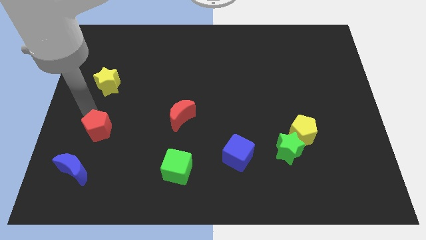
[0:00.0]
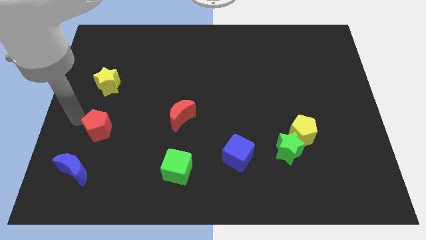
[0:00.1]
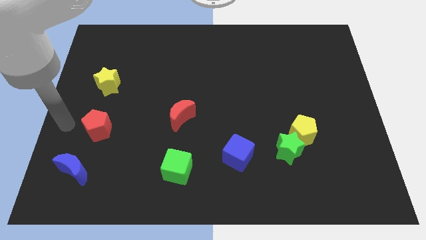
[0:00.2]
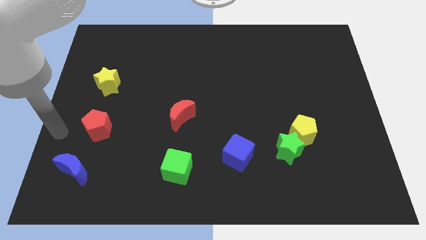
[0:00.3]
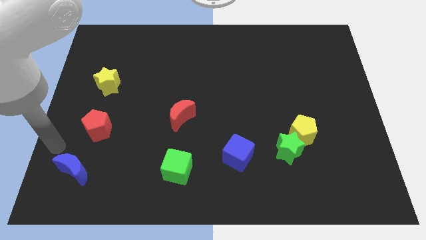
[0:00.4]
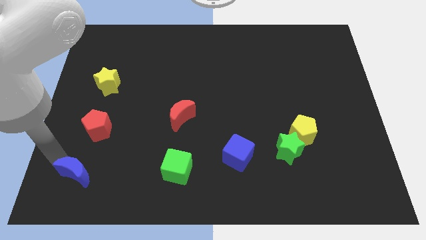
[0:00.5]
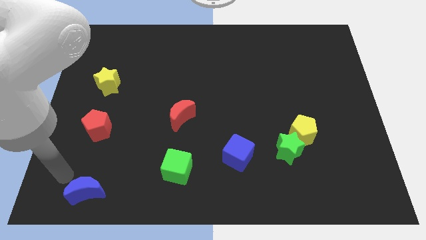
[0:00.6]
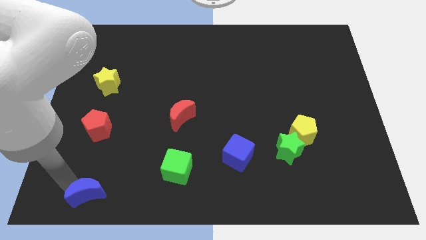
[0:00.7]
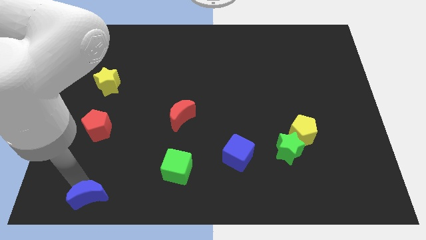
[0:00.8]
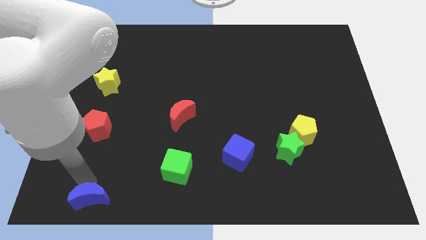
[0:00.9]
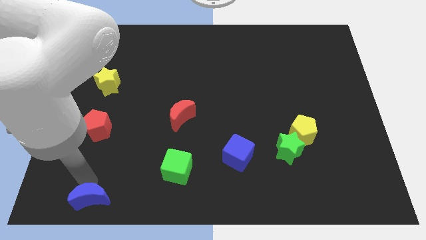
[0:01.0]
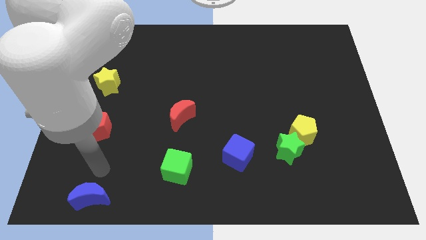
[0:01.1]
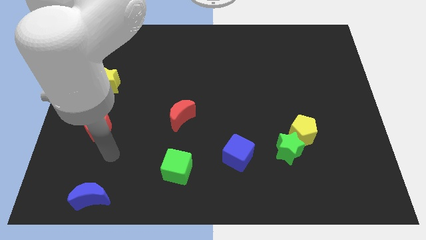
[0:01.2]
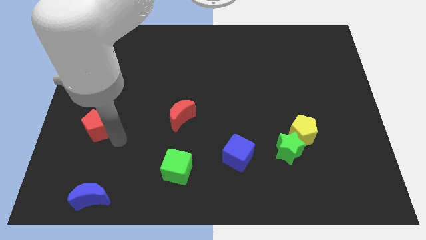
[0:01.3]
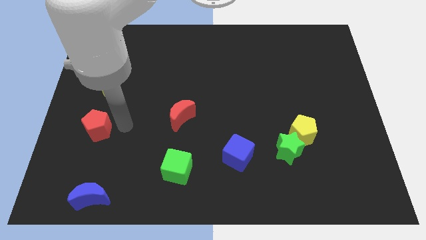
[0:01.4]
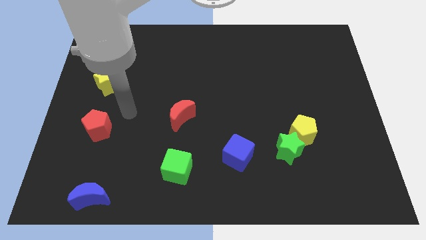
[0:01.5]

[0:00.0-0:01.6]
push the blue moon downward

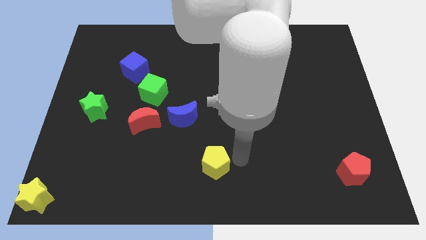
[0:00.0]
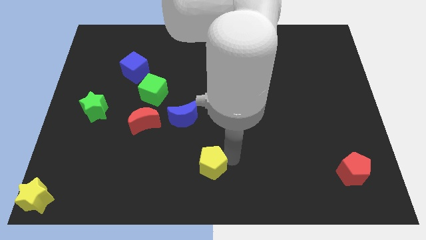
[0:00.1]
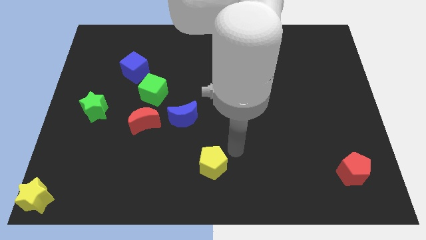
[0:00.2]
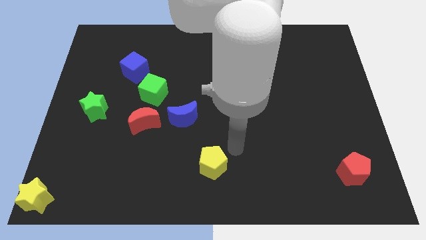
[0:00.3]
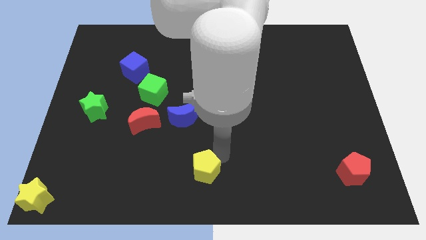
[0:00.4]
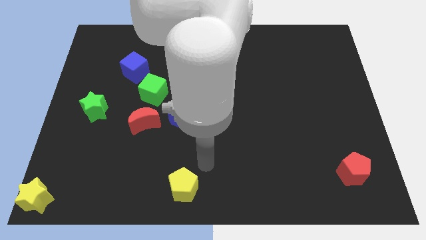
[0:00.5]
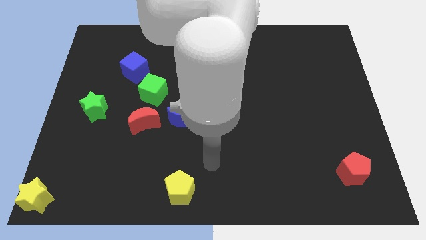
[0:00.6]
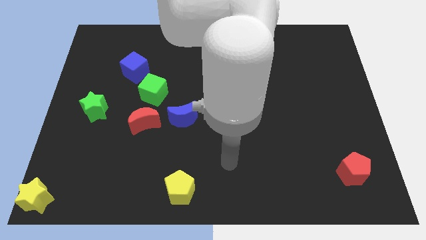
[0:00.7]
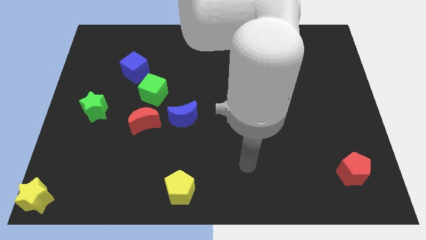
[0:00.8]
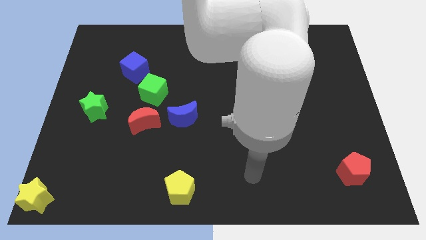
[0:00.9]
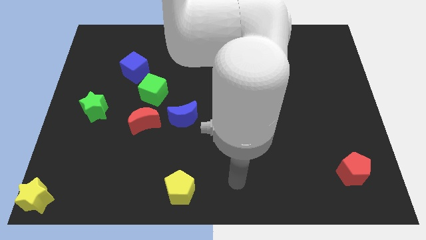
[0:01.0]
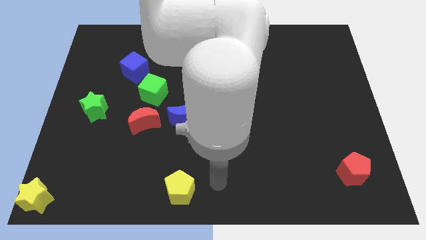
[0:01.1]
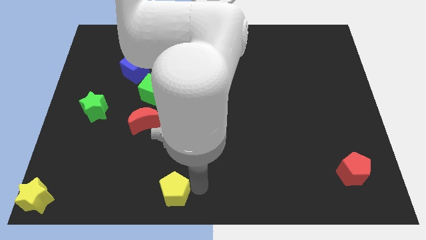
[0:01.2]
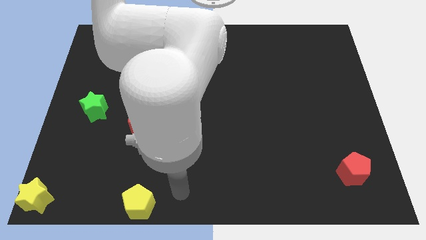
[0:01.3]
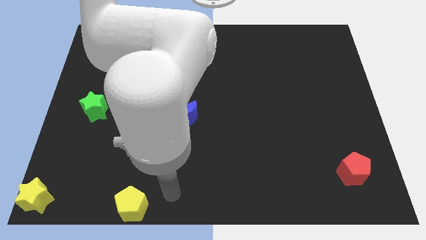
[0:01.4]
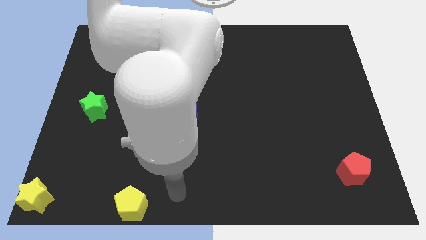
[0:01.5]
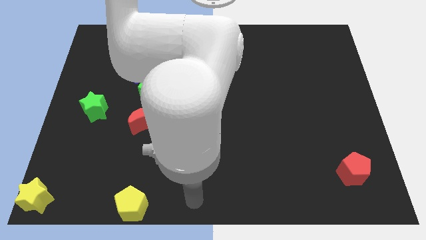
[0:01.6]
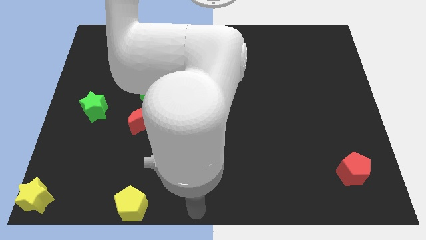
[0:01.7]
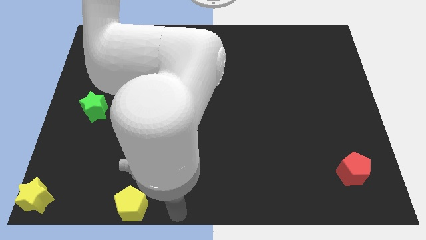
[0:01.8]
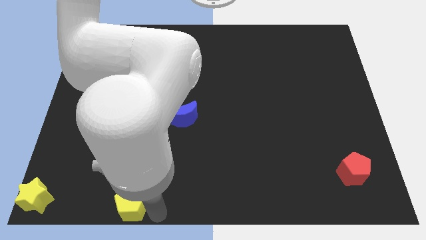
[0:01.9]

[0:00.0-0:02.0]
move the yellow pentagon to the right side of the yellow star horizontally

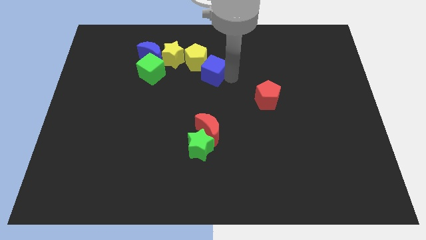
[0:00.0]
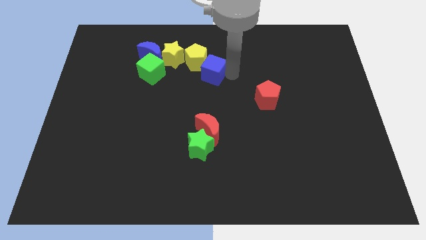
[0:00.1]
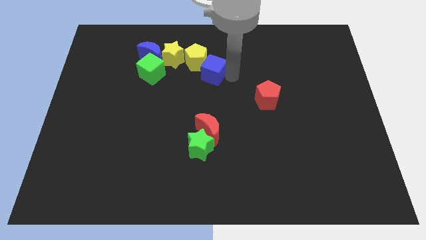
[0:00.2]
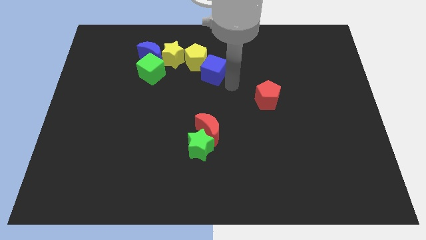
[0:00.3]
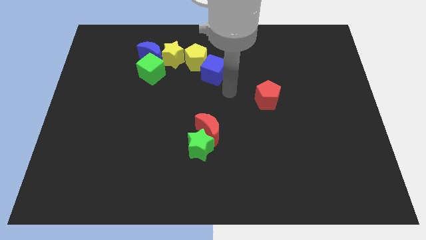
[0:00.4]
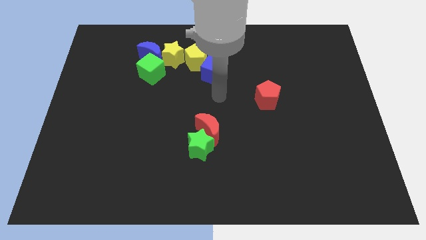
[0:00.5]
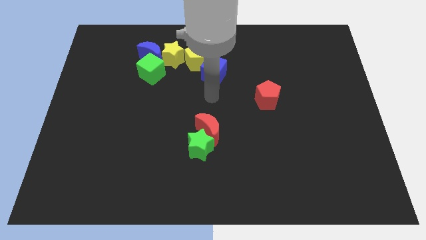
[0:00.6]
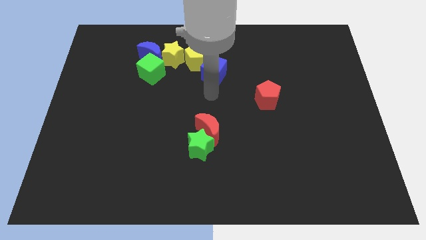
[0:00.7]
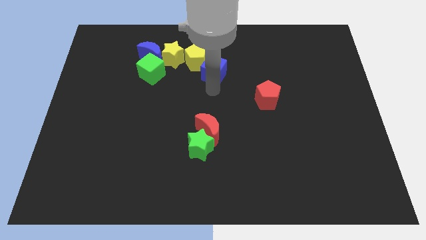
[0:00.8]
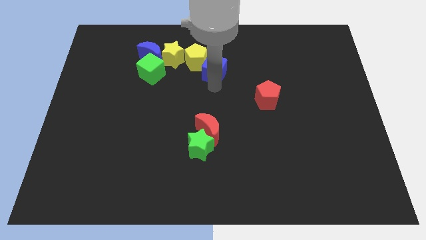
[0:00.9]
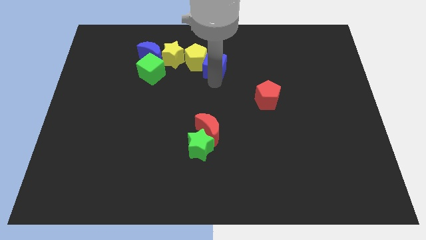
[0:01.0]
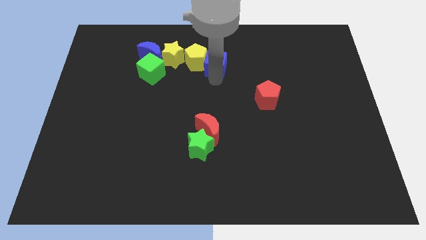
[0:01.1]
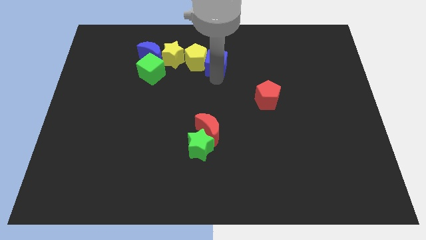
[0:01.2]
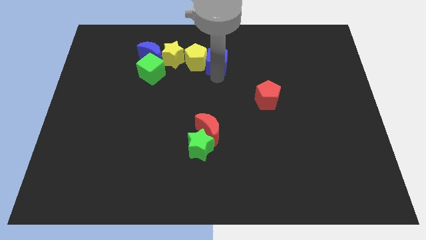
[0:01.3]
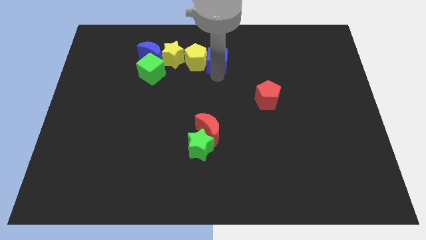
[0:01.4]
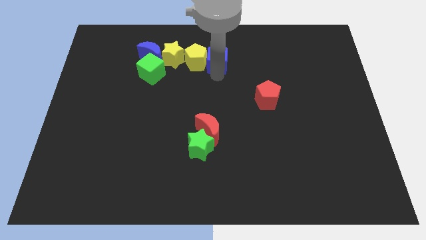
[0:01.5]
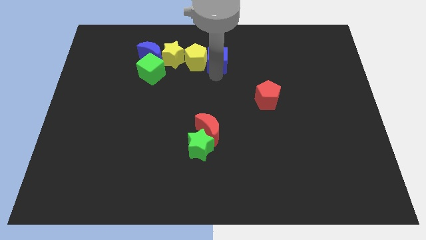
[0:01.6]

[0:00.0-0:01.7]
push the blue cube to the top center

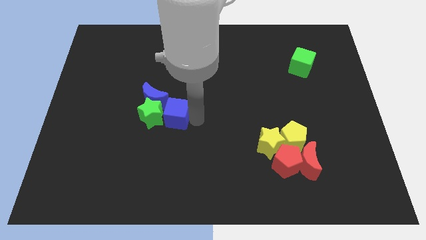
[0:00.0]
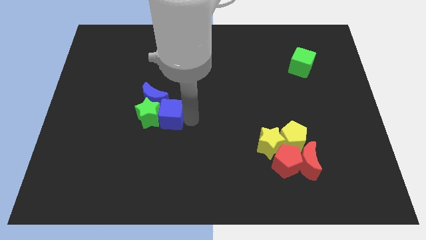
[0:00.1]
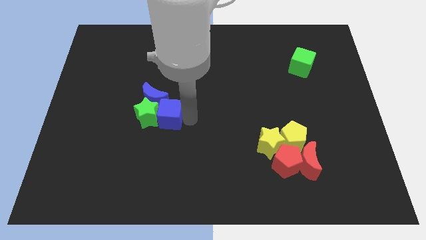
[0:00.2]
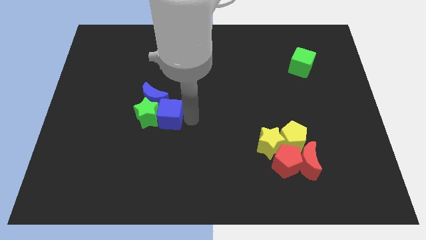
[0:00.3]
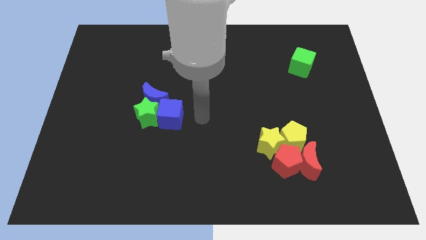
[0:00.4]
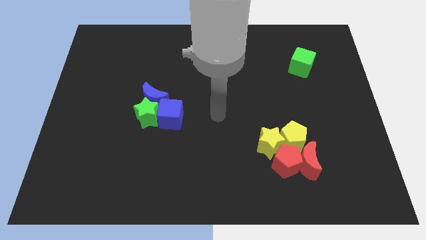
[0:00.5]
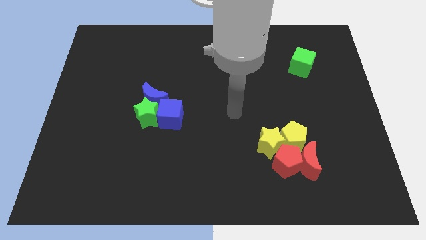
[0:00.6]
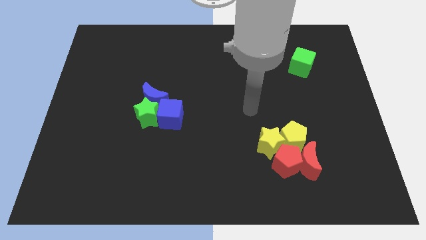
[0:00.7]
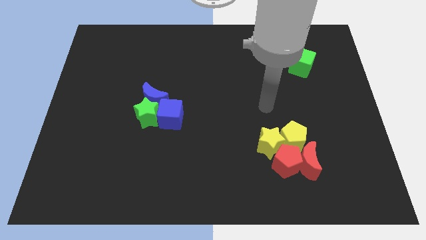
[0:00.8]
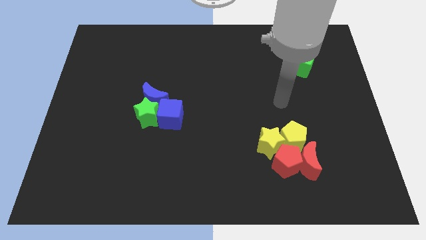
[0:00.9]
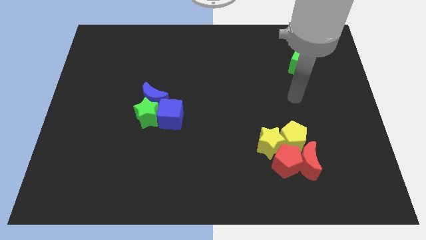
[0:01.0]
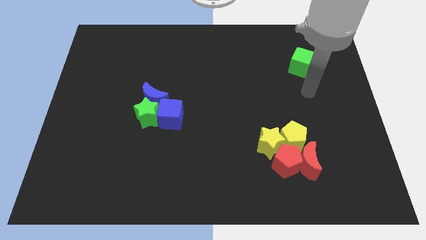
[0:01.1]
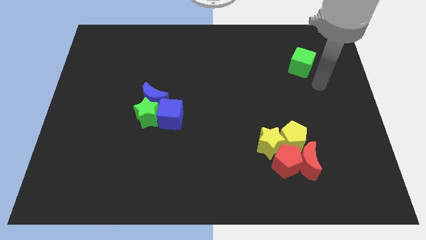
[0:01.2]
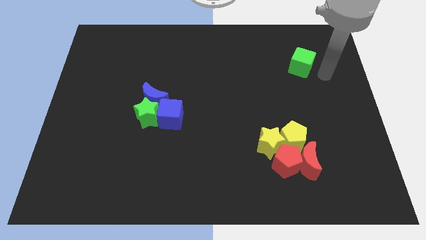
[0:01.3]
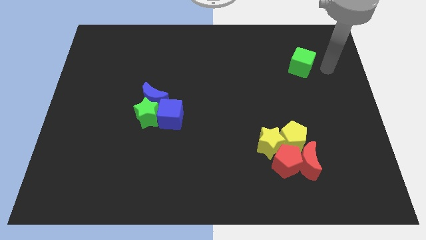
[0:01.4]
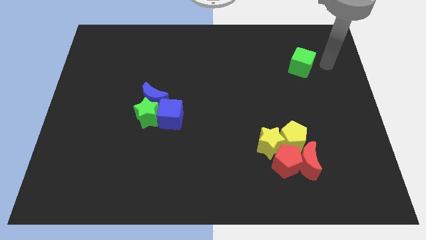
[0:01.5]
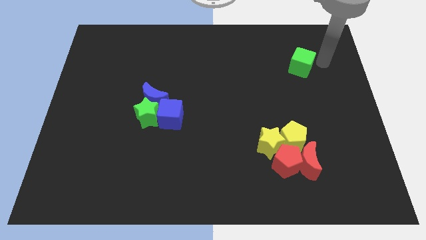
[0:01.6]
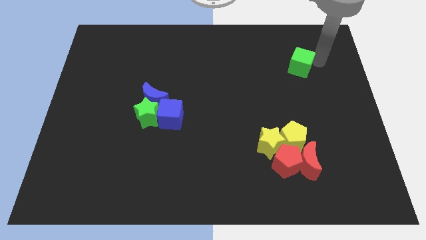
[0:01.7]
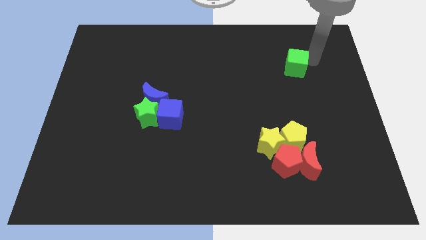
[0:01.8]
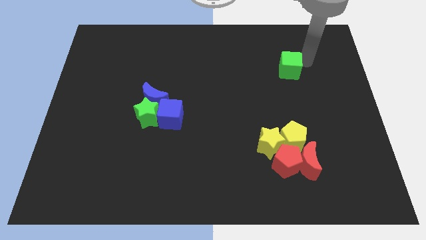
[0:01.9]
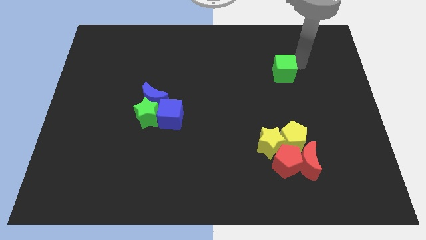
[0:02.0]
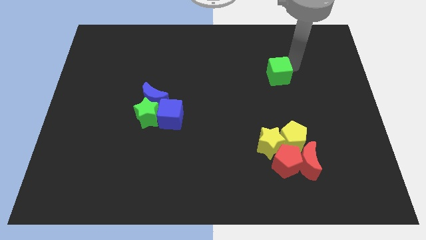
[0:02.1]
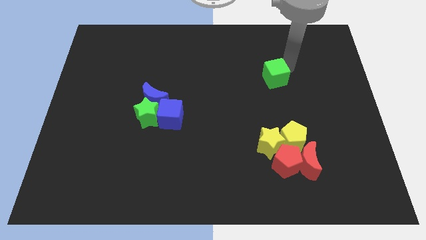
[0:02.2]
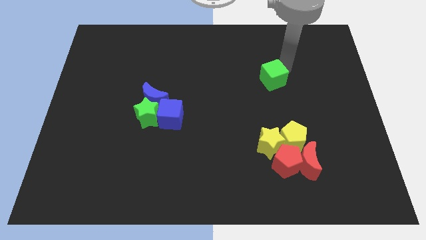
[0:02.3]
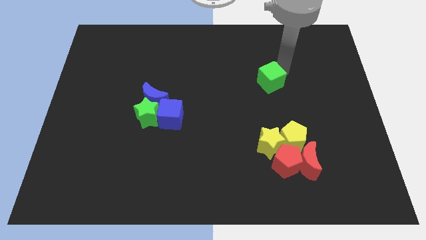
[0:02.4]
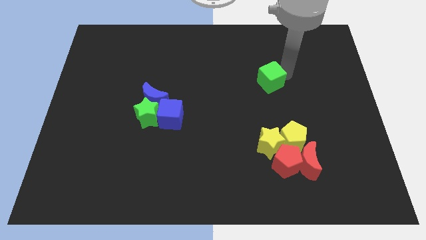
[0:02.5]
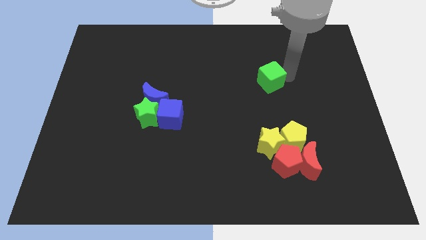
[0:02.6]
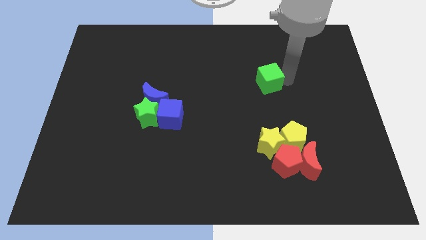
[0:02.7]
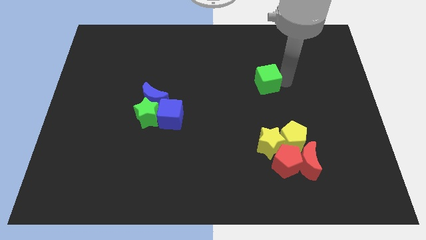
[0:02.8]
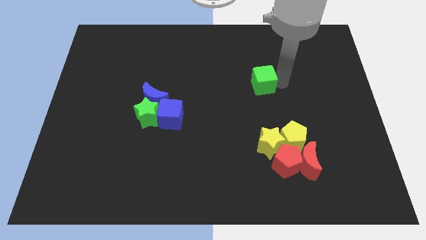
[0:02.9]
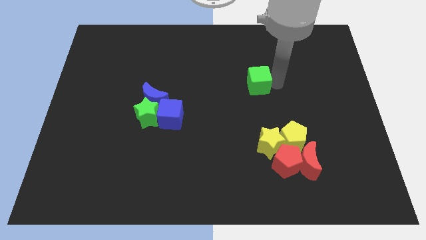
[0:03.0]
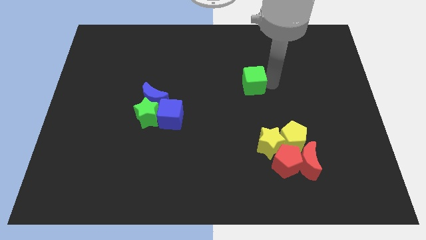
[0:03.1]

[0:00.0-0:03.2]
move the green cube at the top of the yellow star

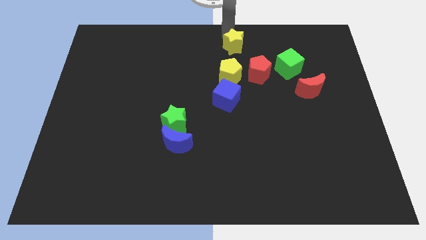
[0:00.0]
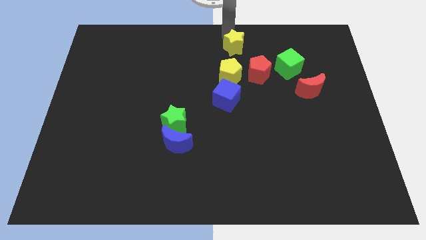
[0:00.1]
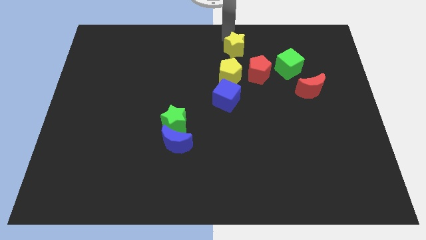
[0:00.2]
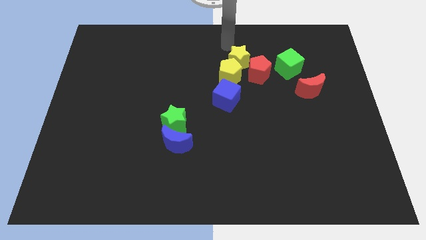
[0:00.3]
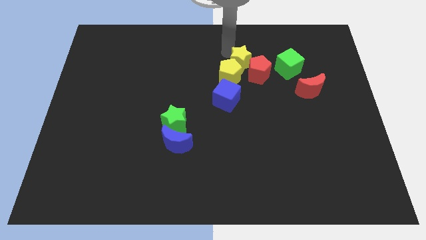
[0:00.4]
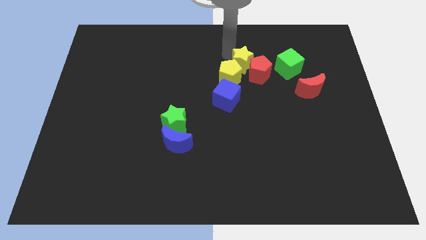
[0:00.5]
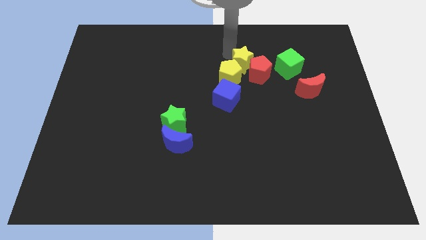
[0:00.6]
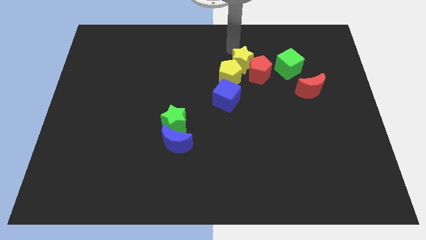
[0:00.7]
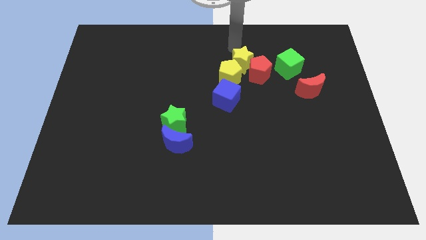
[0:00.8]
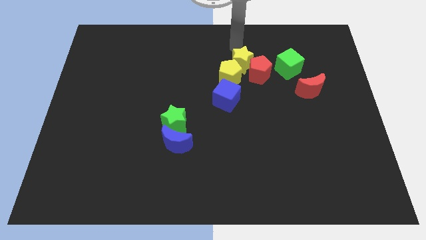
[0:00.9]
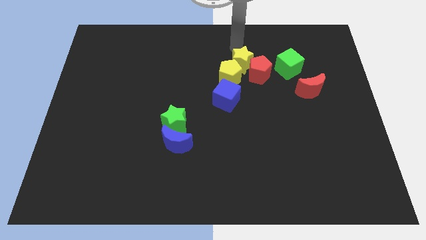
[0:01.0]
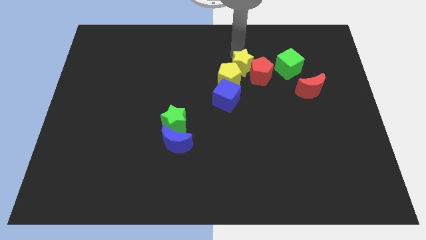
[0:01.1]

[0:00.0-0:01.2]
move the yellow star into the red pentagon
